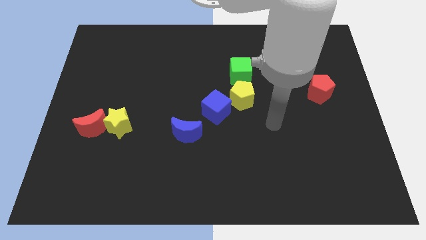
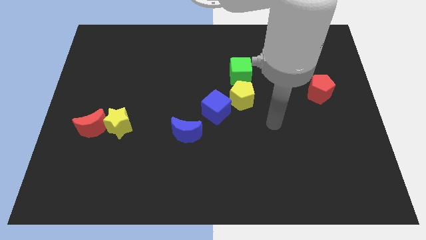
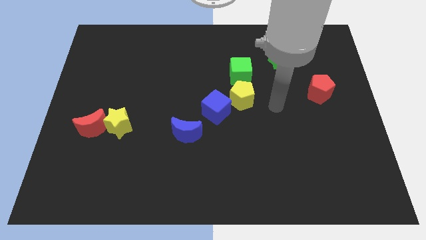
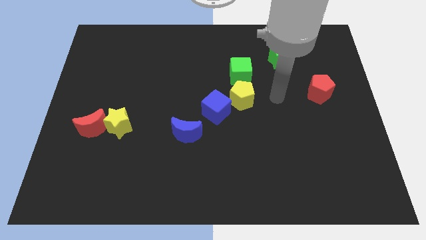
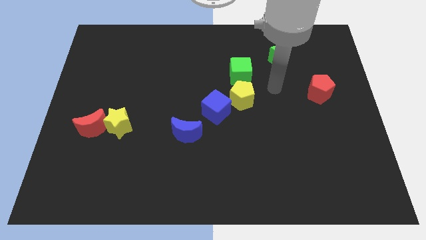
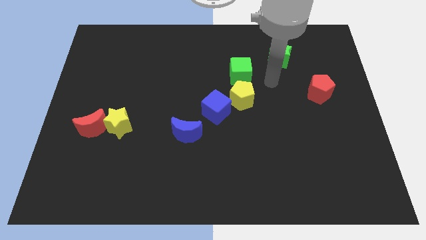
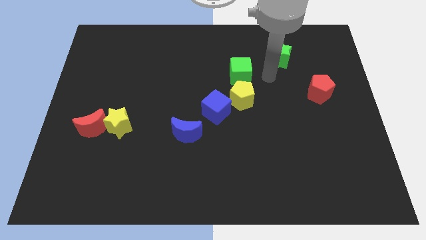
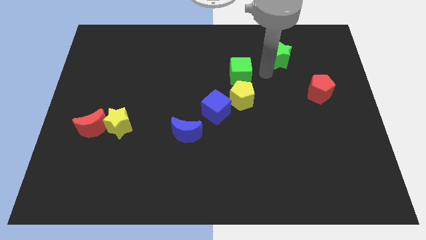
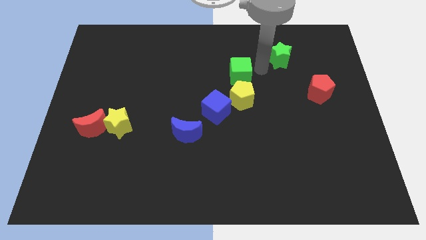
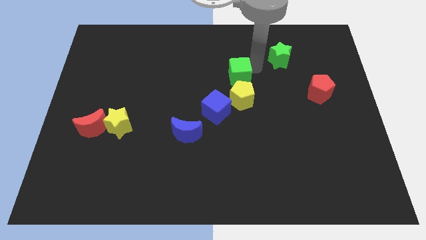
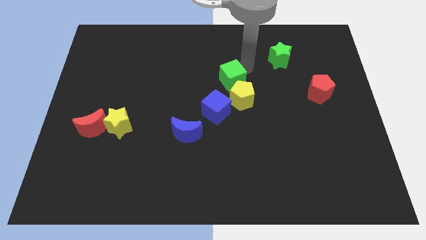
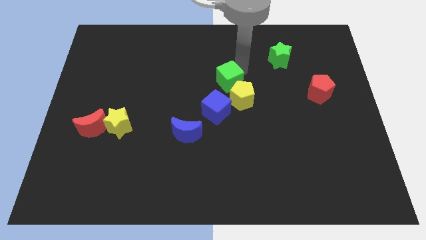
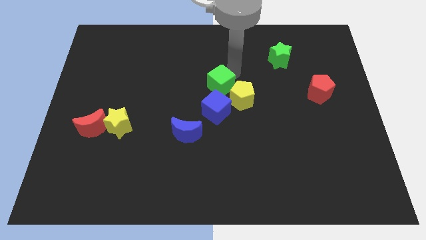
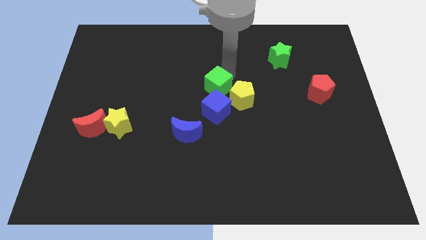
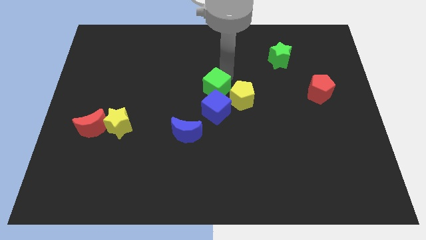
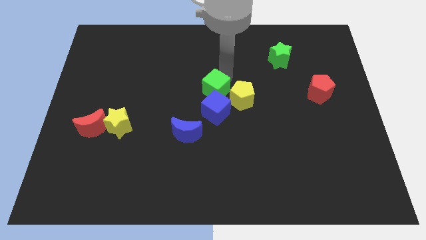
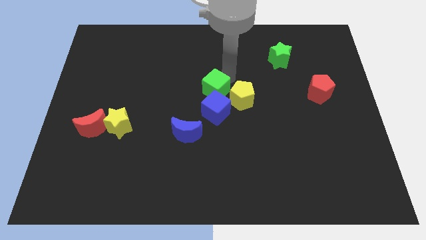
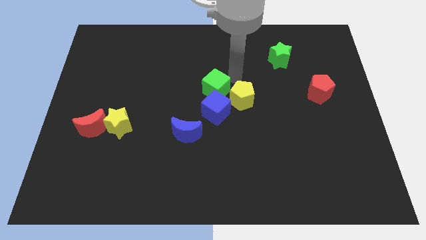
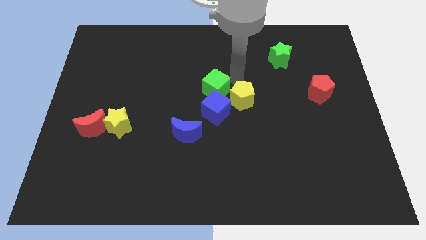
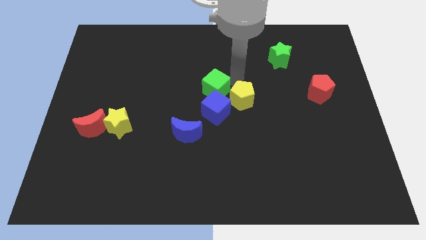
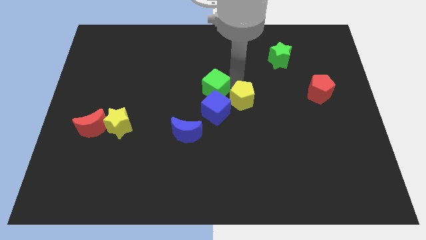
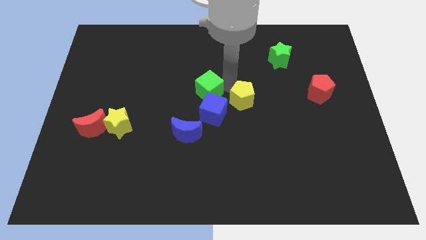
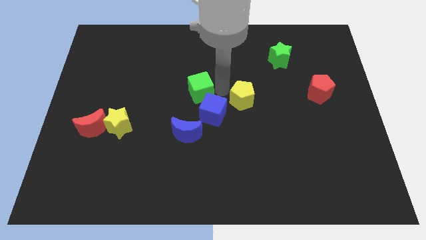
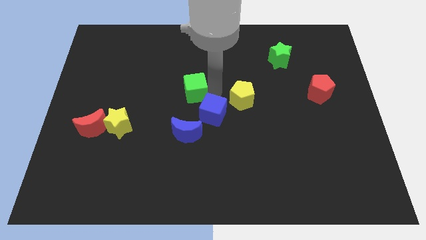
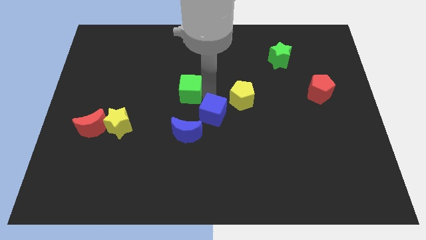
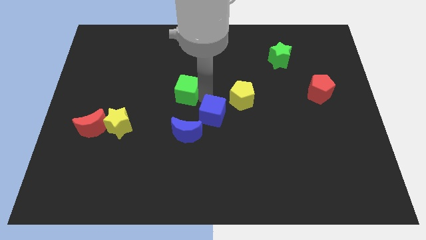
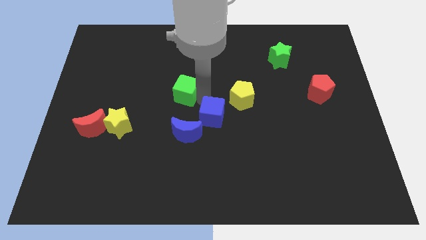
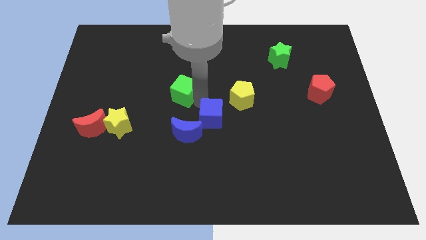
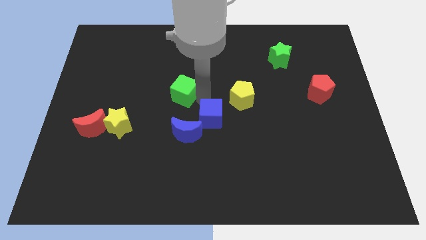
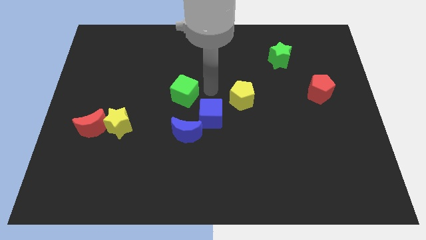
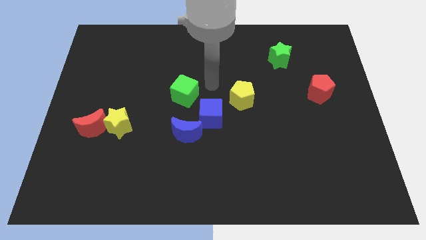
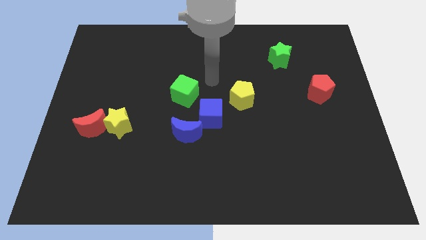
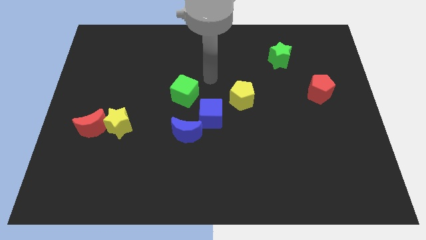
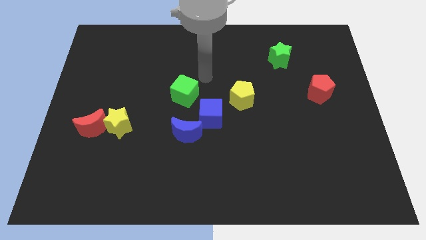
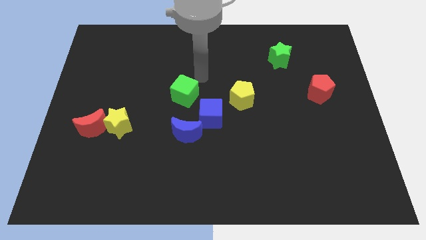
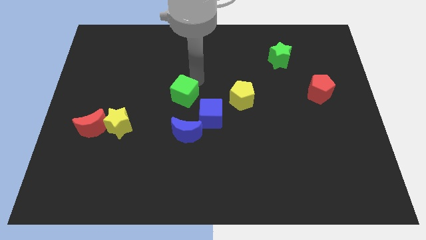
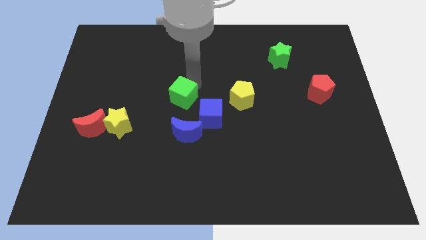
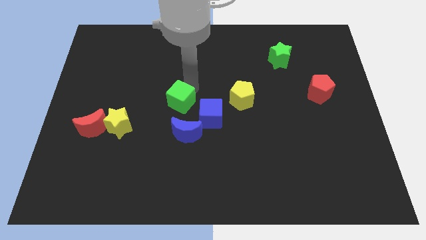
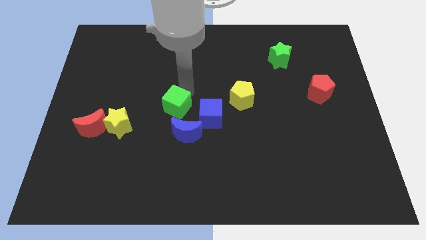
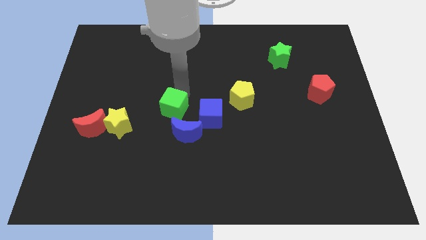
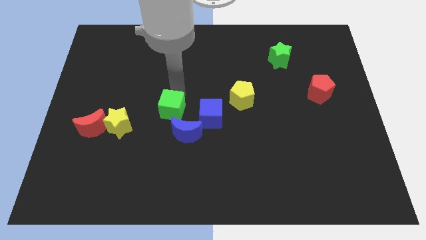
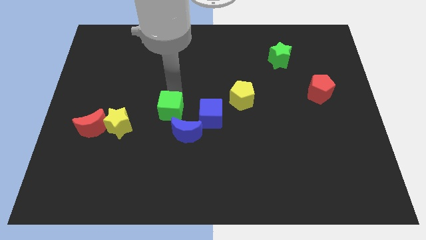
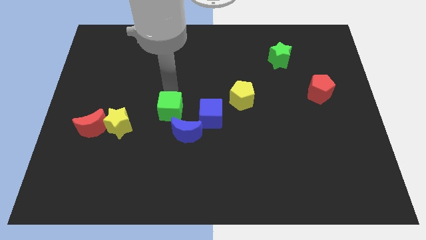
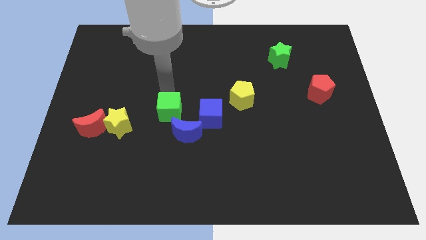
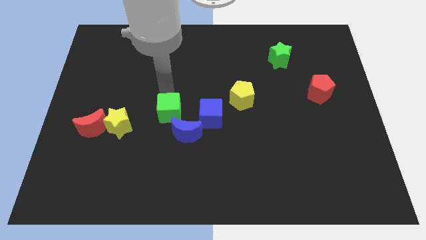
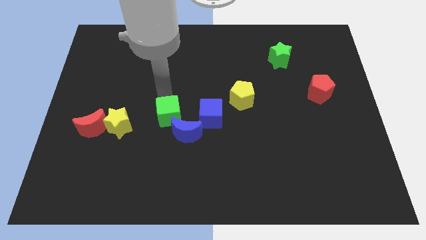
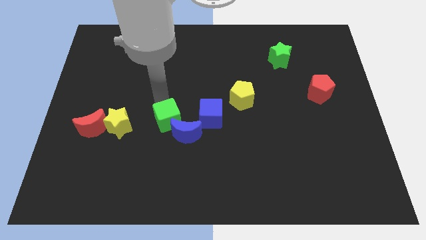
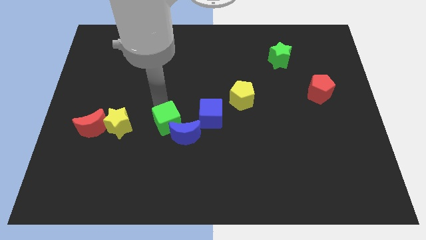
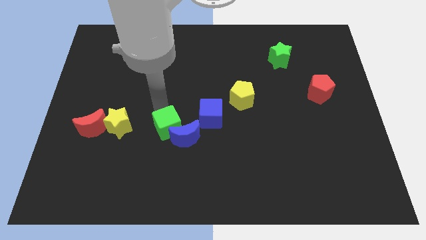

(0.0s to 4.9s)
move the green cube to the blue moon

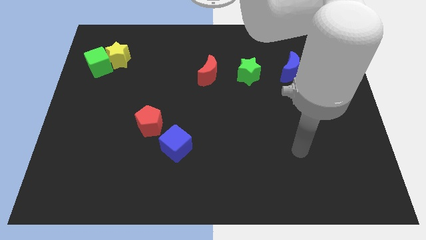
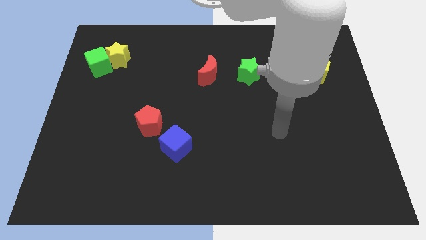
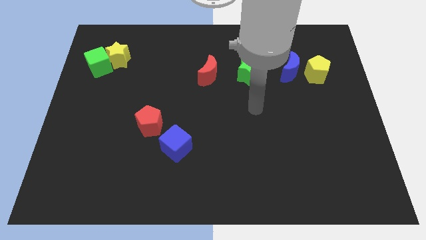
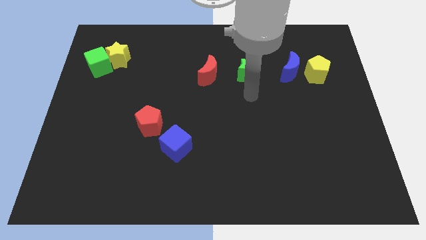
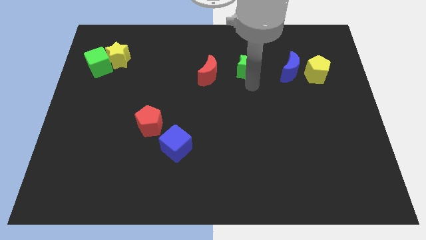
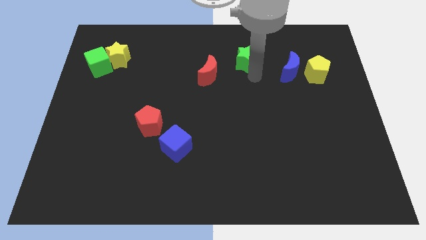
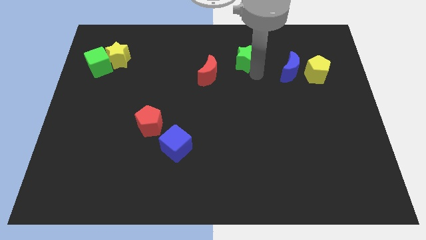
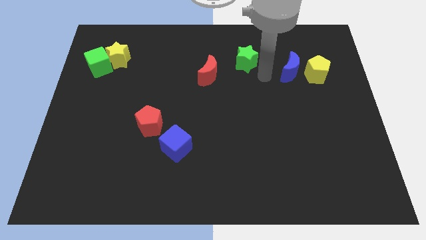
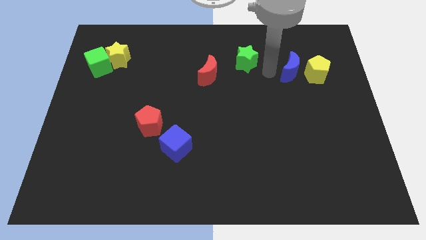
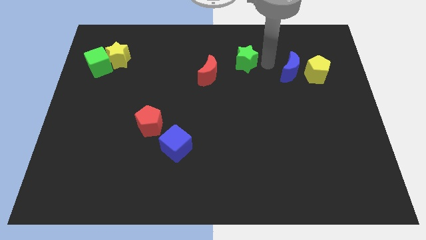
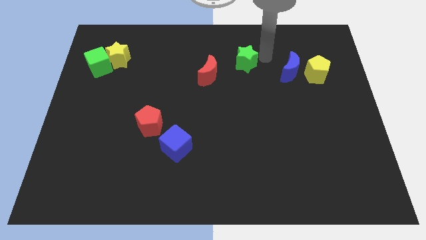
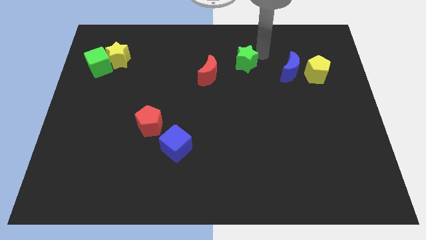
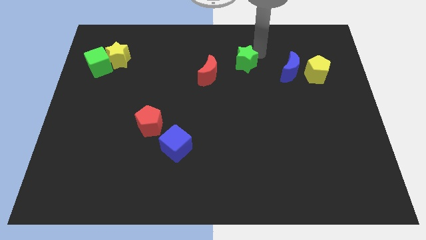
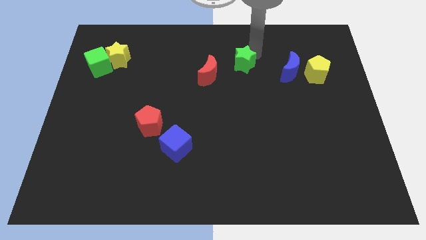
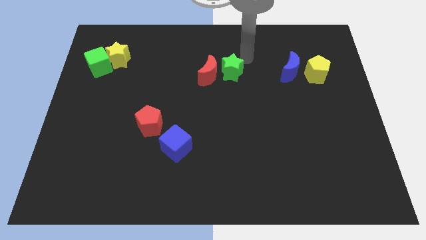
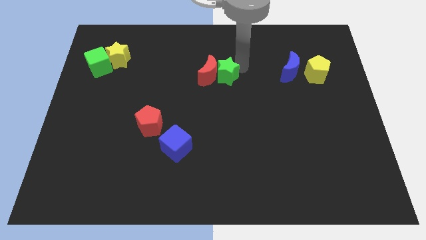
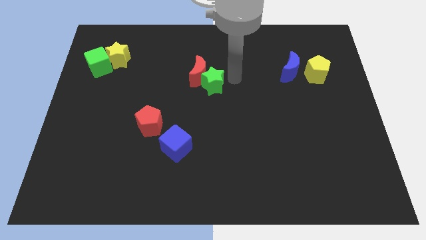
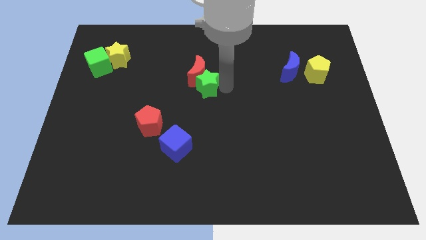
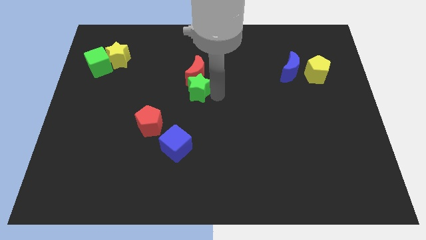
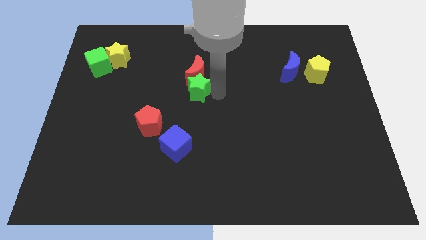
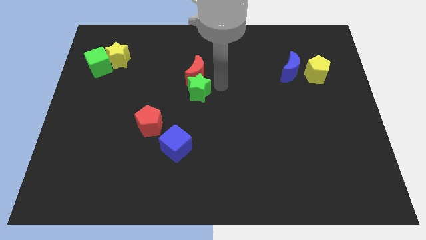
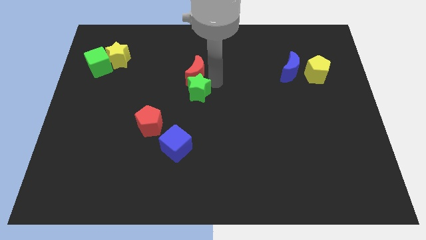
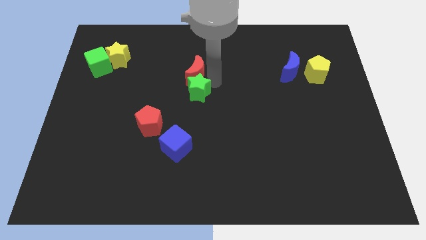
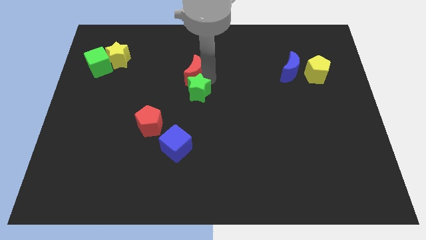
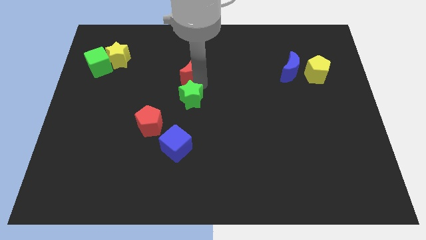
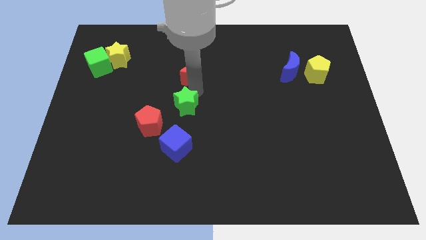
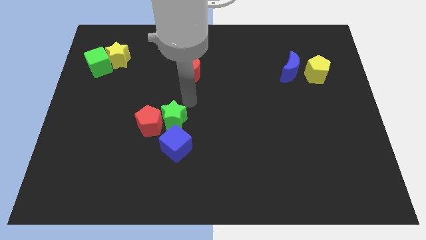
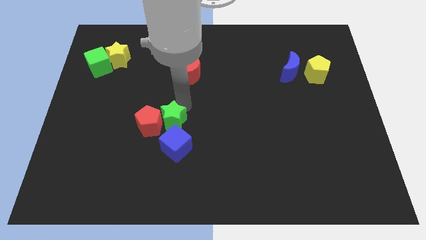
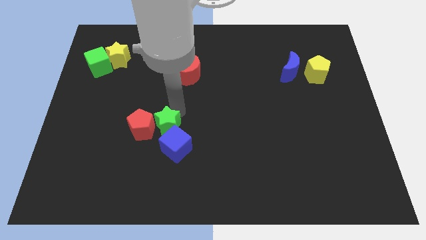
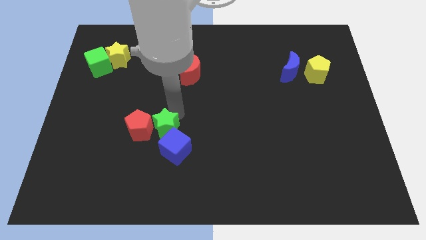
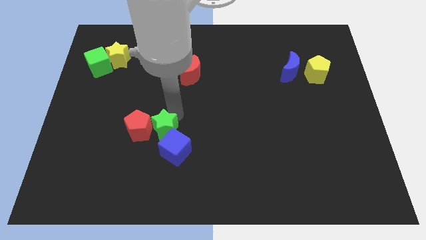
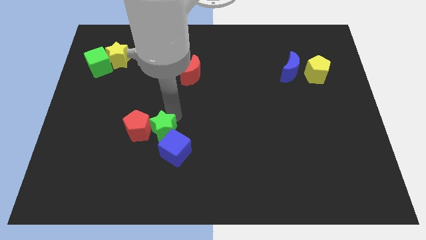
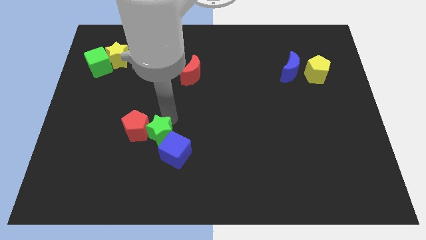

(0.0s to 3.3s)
slide the green star to the blue cube
